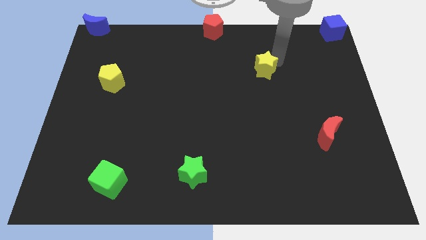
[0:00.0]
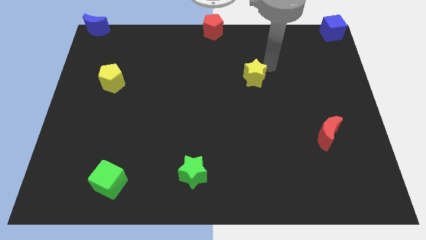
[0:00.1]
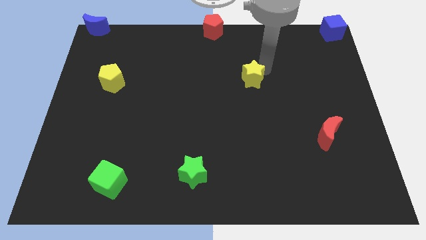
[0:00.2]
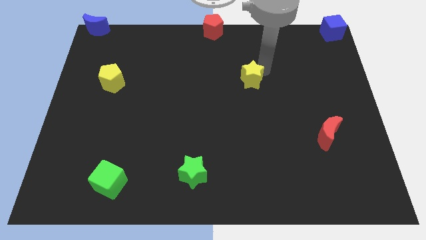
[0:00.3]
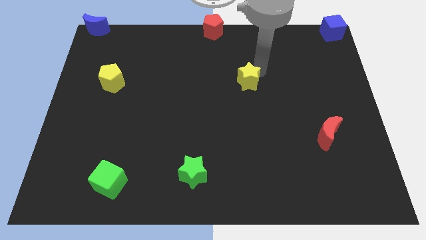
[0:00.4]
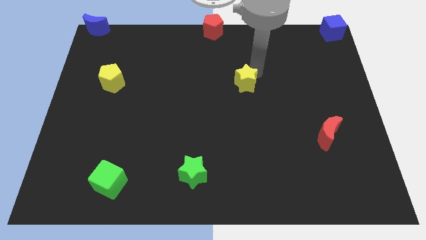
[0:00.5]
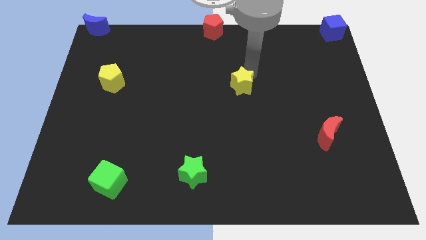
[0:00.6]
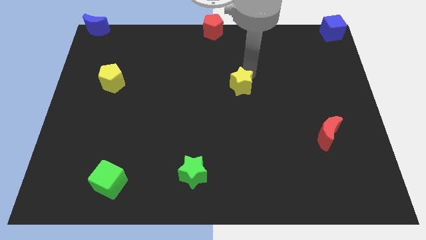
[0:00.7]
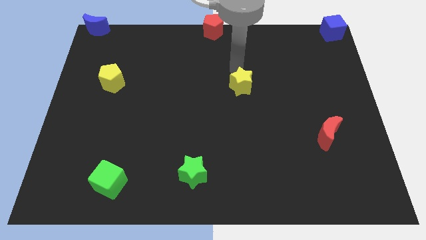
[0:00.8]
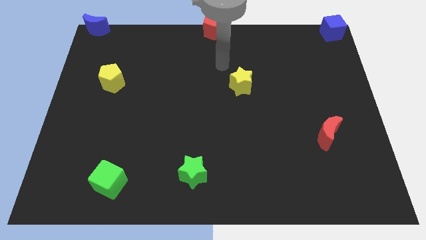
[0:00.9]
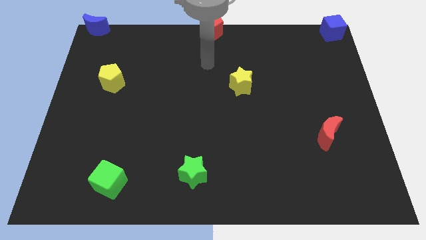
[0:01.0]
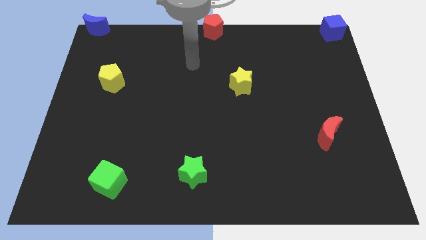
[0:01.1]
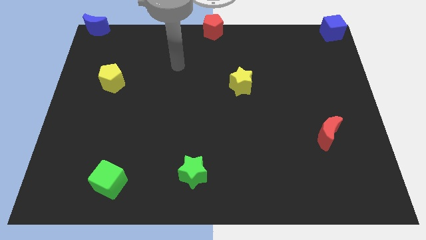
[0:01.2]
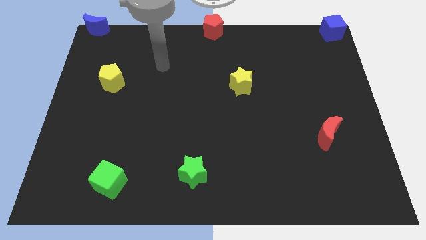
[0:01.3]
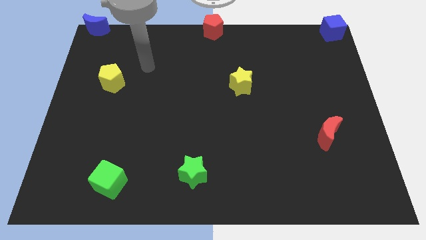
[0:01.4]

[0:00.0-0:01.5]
move the yellow star to the center

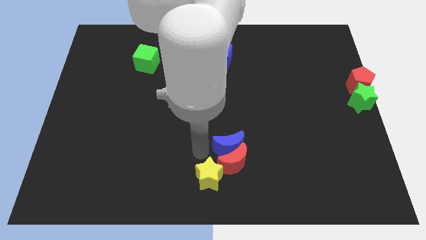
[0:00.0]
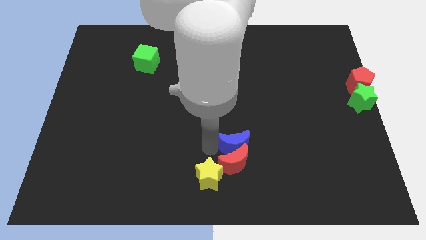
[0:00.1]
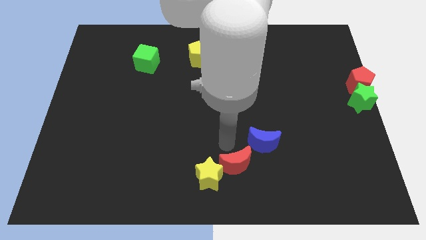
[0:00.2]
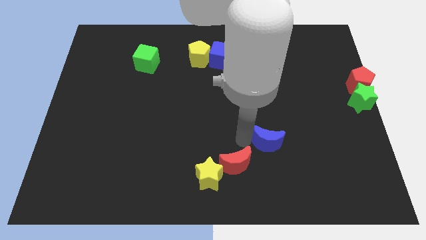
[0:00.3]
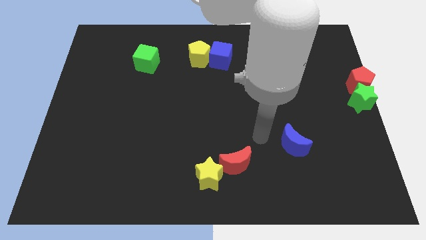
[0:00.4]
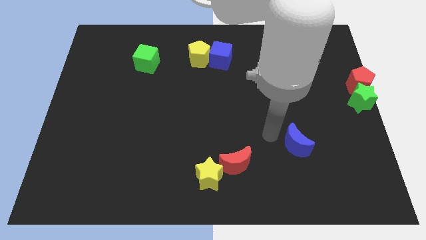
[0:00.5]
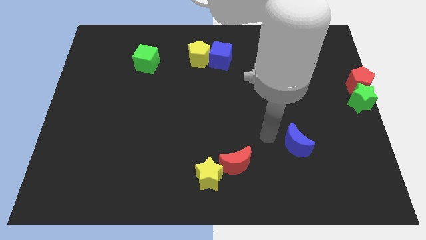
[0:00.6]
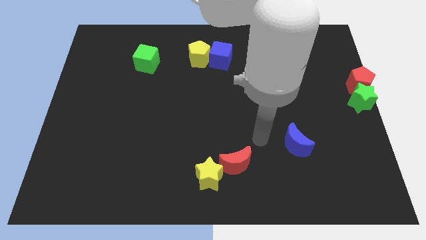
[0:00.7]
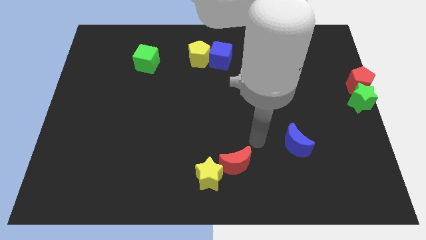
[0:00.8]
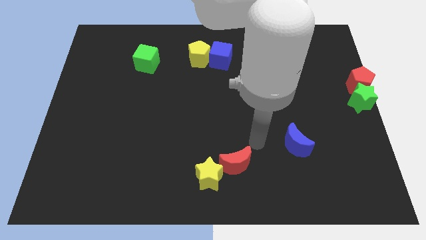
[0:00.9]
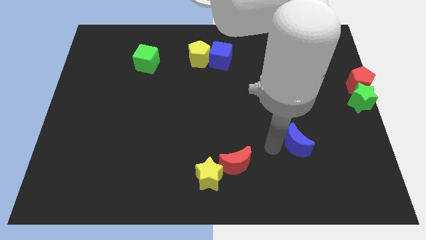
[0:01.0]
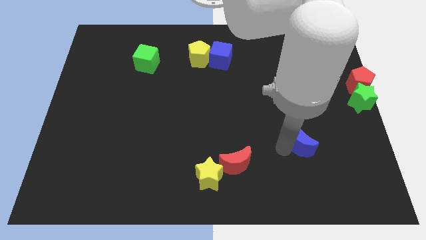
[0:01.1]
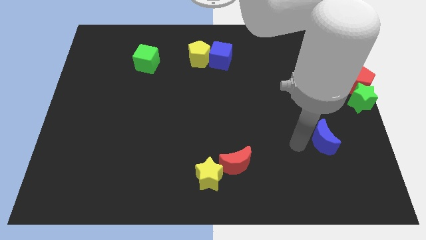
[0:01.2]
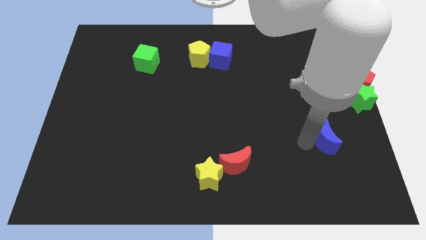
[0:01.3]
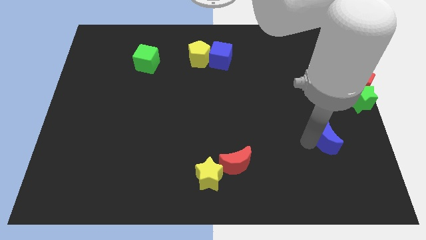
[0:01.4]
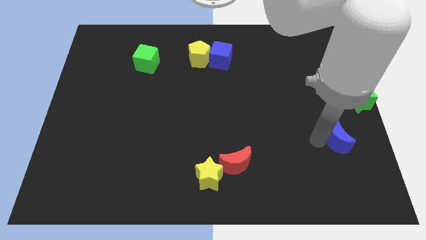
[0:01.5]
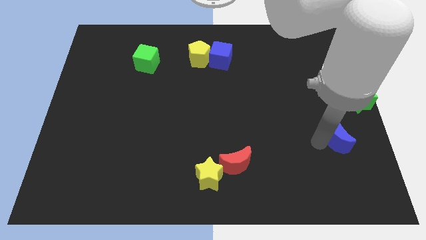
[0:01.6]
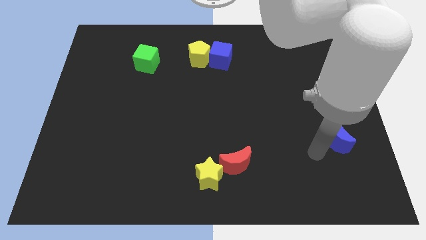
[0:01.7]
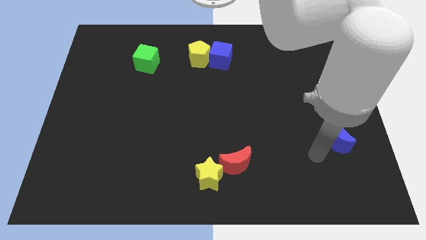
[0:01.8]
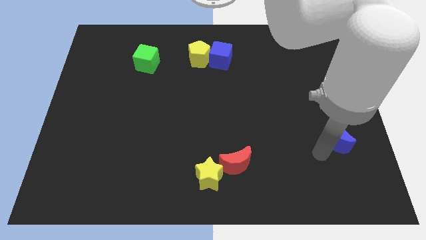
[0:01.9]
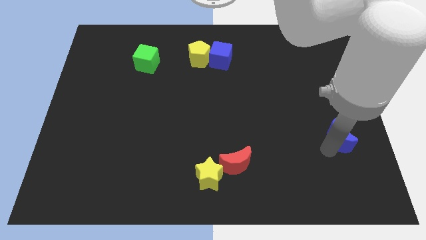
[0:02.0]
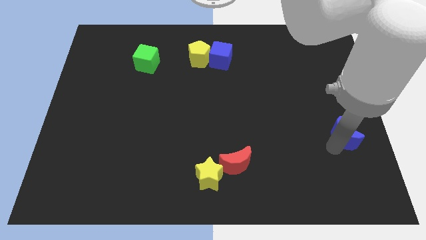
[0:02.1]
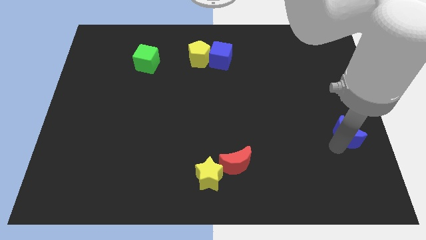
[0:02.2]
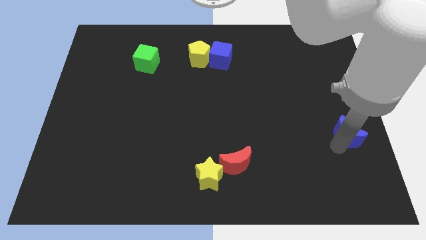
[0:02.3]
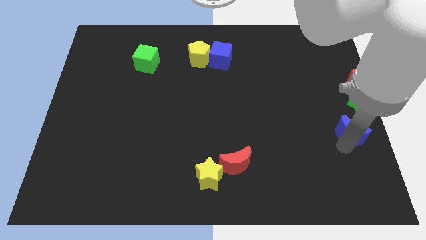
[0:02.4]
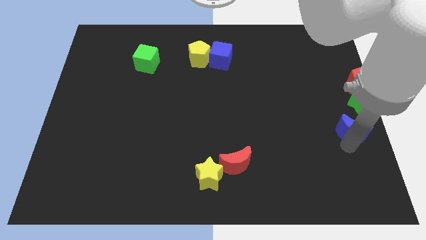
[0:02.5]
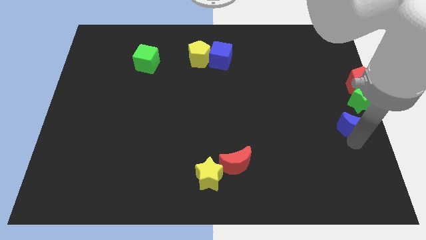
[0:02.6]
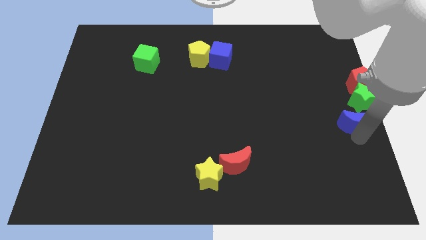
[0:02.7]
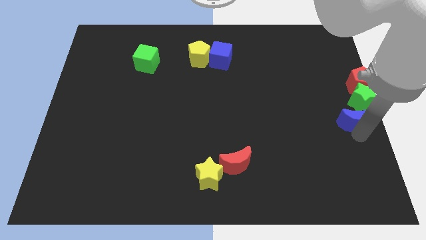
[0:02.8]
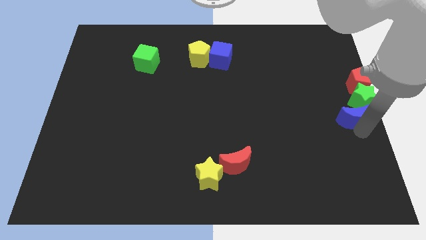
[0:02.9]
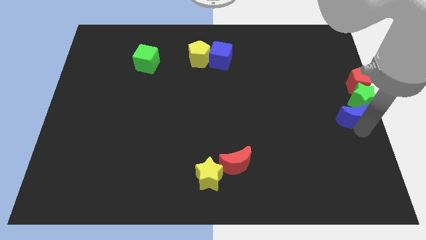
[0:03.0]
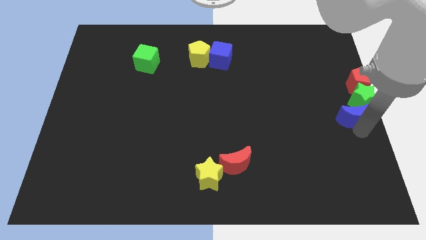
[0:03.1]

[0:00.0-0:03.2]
drag the blue moon close to the bottom side of the green star

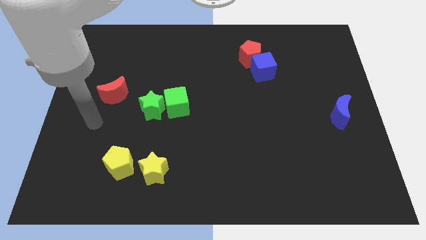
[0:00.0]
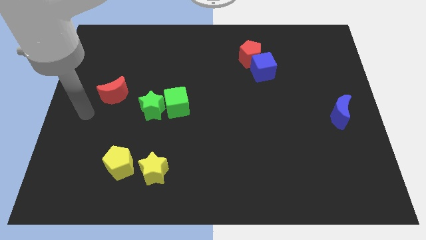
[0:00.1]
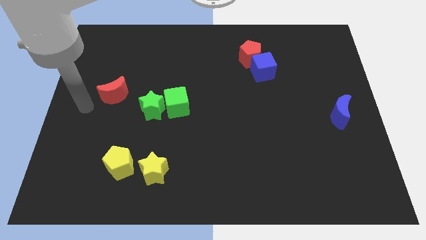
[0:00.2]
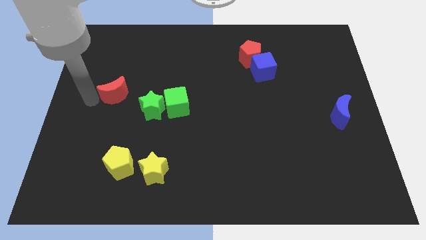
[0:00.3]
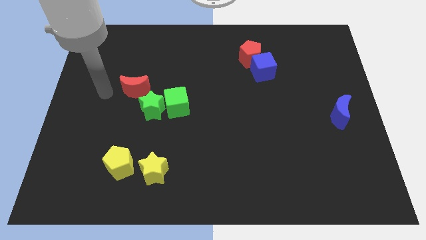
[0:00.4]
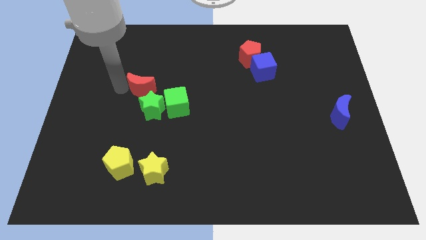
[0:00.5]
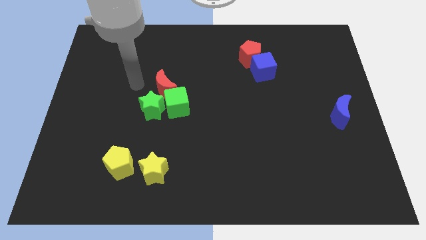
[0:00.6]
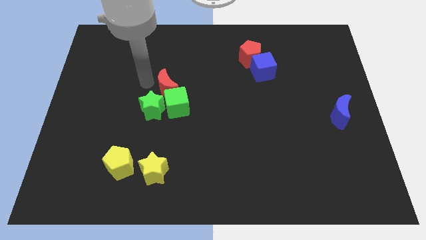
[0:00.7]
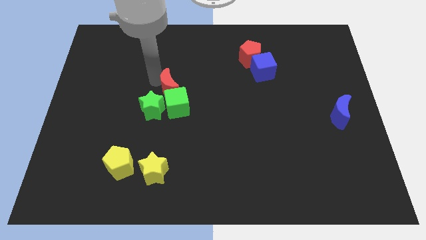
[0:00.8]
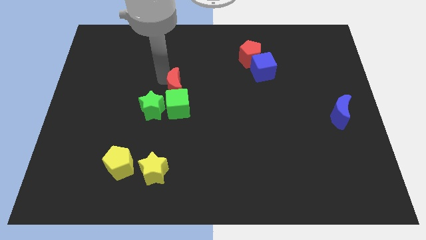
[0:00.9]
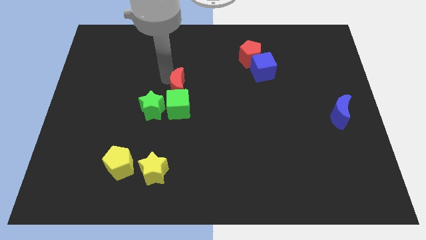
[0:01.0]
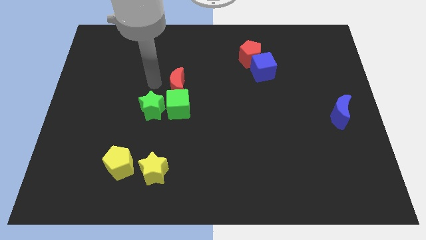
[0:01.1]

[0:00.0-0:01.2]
move the red moon top to the green cube

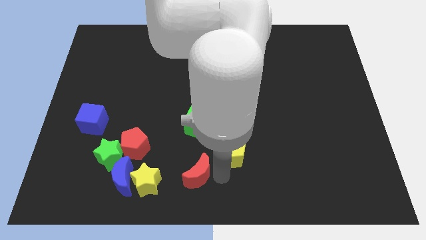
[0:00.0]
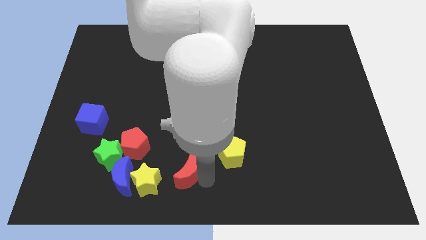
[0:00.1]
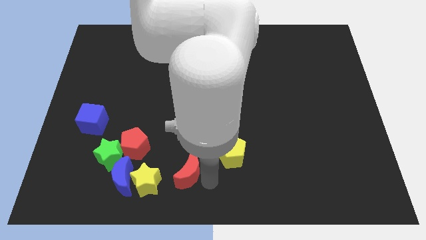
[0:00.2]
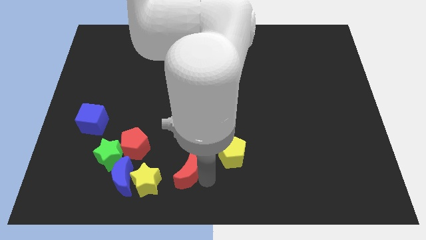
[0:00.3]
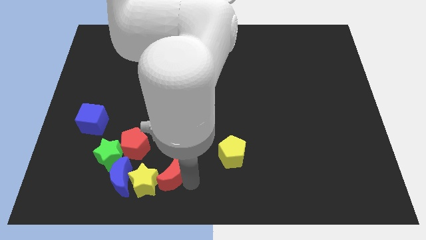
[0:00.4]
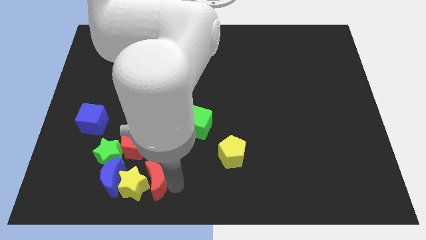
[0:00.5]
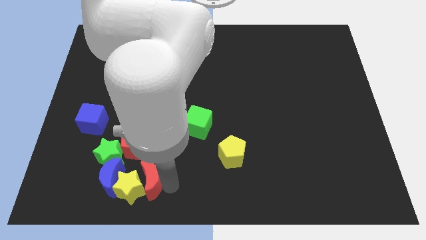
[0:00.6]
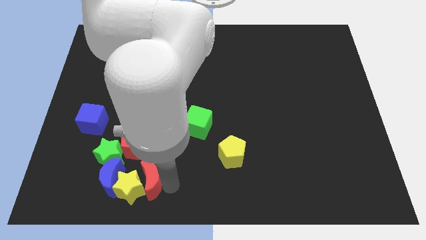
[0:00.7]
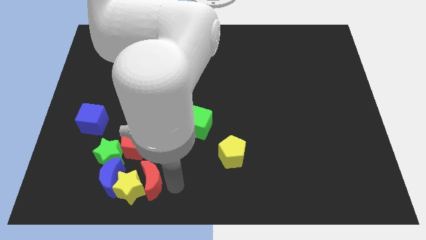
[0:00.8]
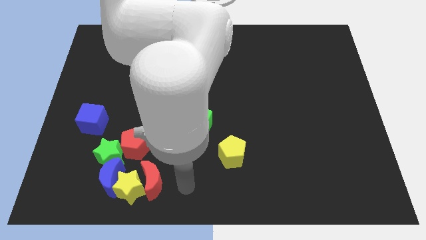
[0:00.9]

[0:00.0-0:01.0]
move the red crescent towards the group of blocks on the bottom left of the board

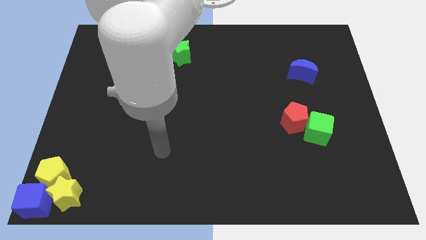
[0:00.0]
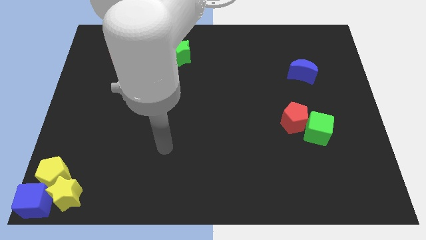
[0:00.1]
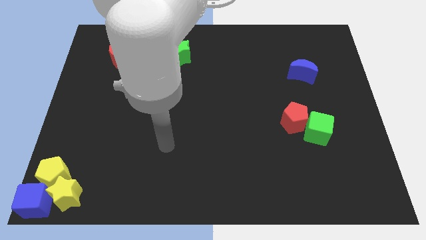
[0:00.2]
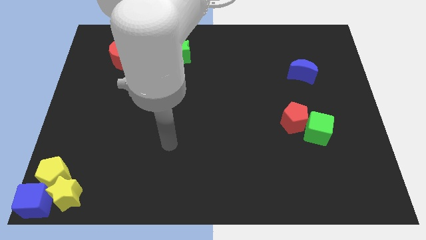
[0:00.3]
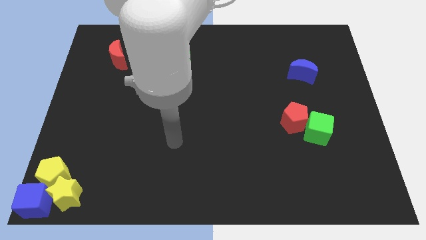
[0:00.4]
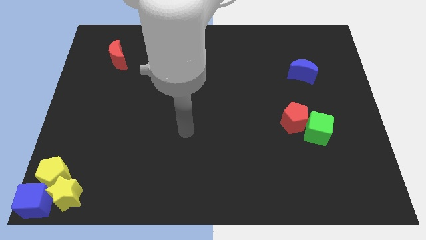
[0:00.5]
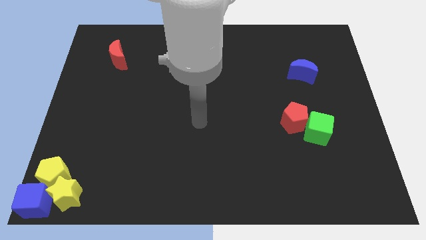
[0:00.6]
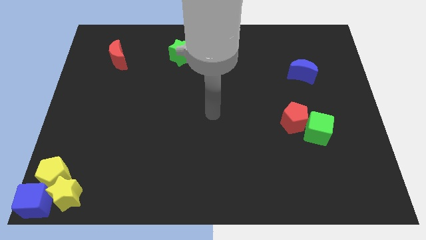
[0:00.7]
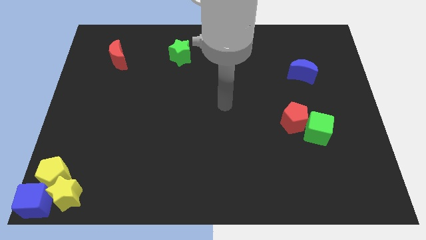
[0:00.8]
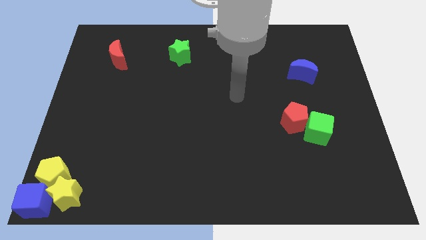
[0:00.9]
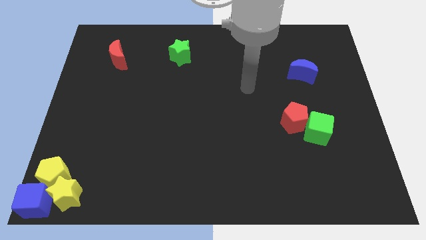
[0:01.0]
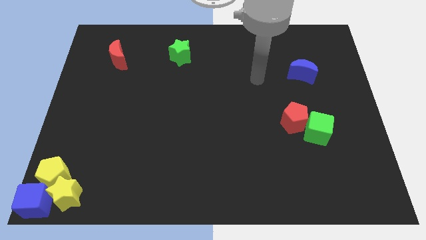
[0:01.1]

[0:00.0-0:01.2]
move your arm towards the top side of the board

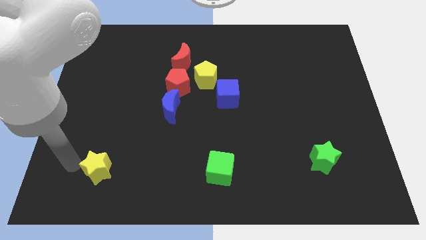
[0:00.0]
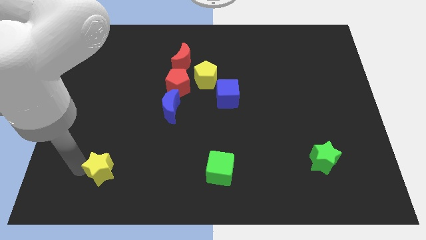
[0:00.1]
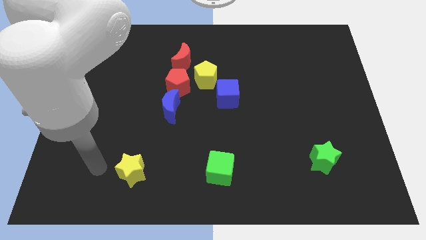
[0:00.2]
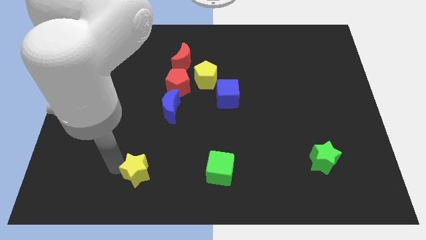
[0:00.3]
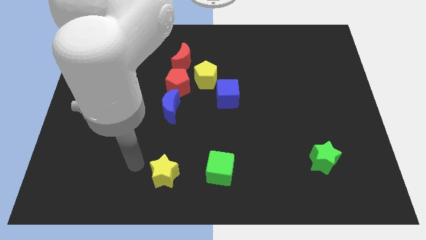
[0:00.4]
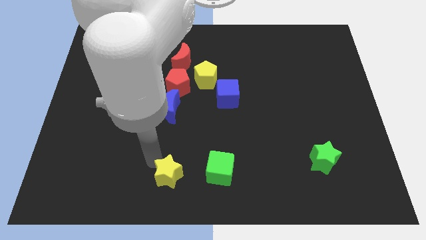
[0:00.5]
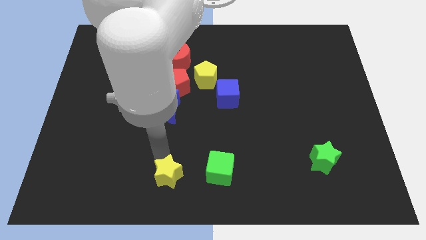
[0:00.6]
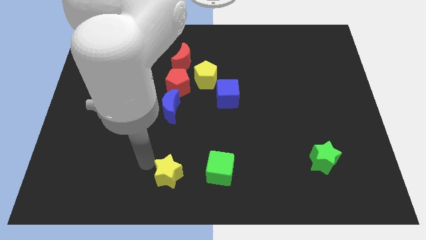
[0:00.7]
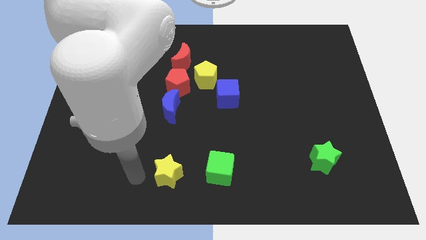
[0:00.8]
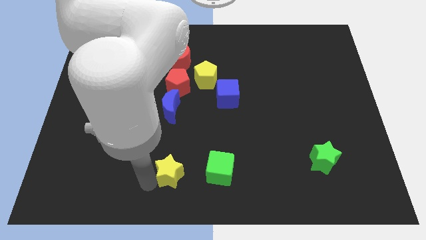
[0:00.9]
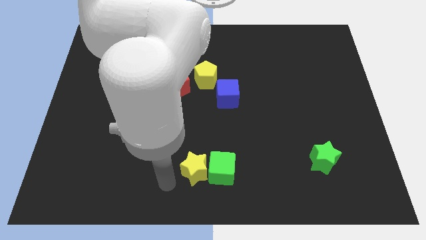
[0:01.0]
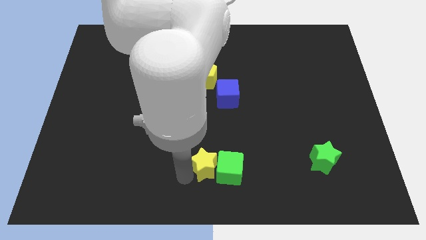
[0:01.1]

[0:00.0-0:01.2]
push the yellow star into the green cube from left
